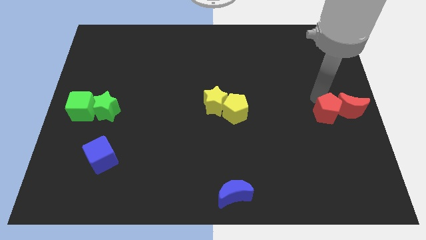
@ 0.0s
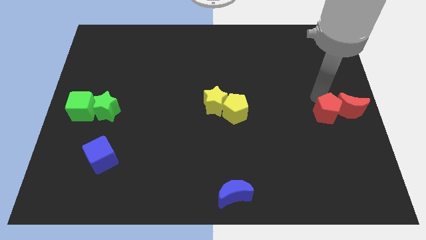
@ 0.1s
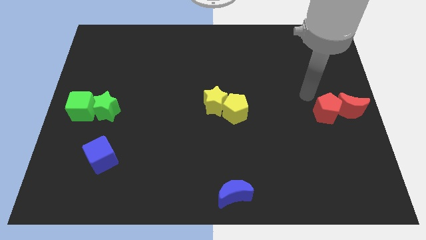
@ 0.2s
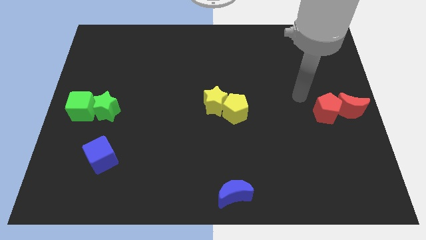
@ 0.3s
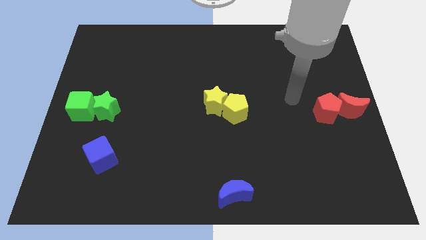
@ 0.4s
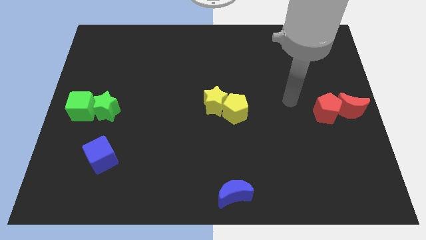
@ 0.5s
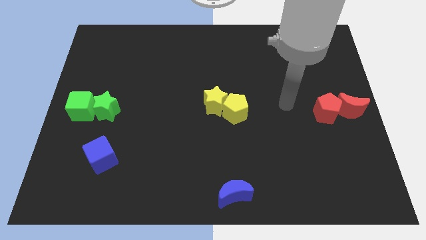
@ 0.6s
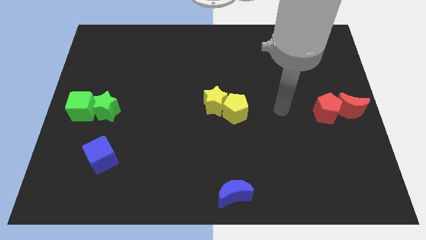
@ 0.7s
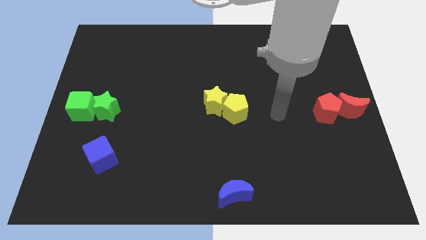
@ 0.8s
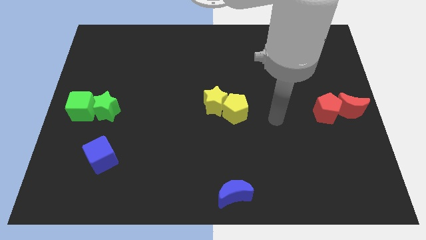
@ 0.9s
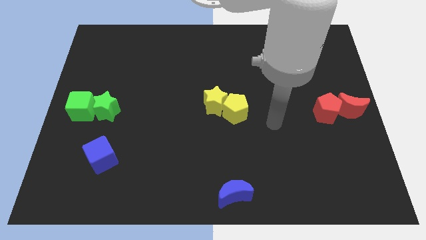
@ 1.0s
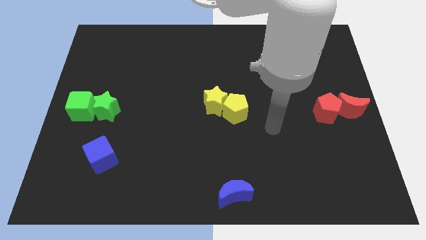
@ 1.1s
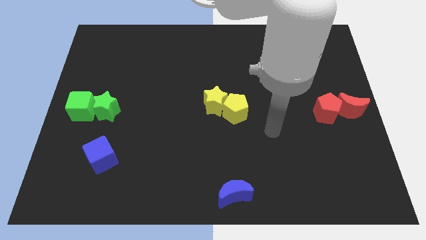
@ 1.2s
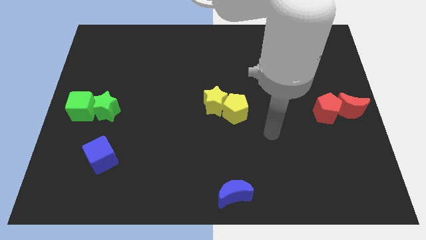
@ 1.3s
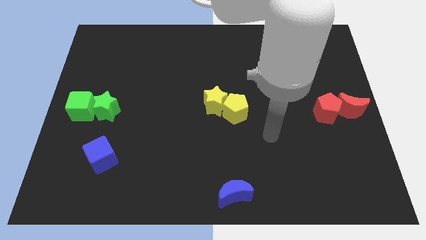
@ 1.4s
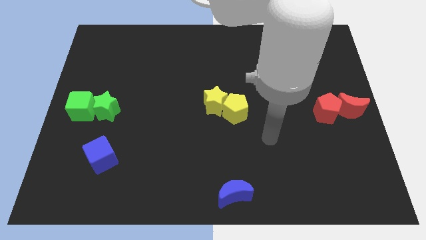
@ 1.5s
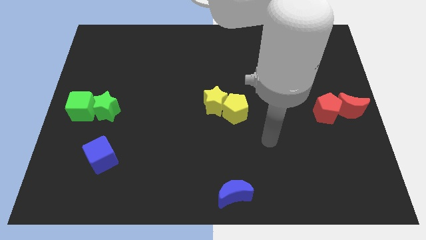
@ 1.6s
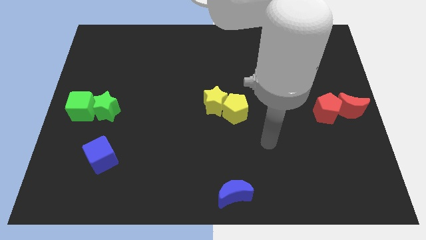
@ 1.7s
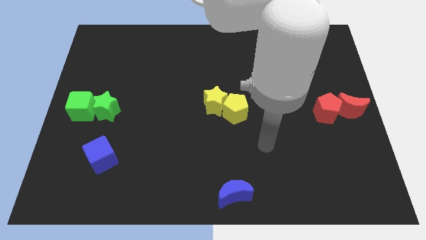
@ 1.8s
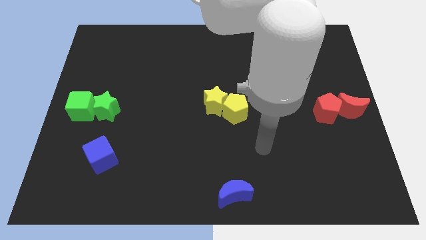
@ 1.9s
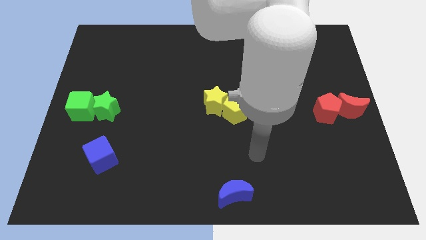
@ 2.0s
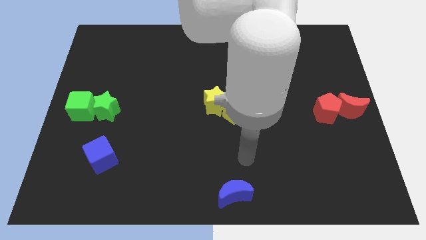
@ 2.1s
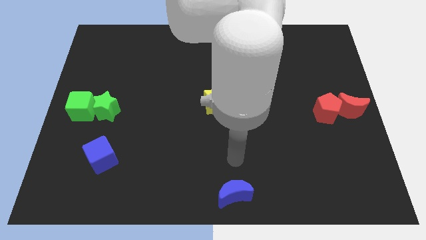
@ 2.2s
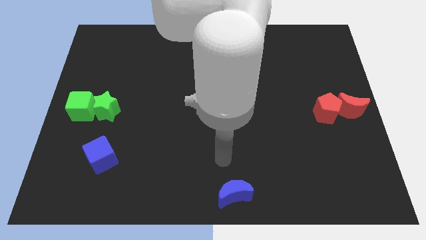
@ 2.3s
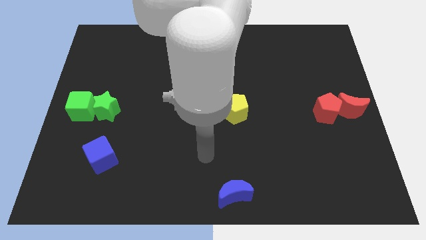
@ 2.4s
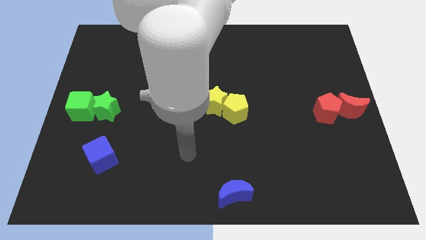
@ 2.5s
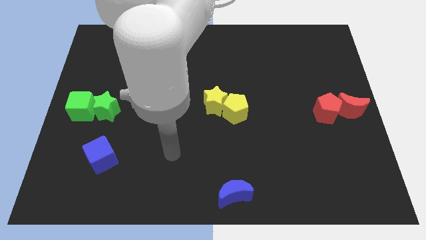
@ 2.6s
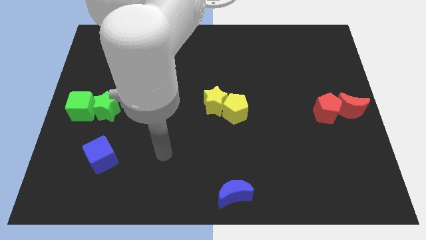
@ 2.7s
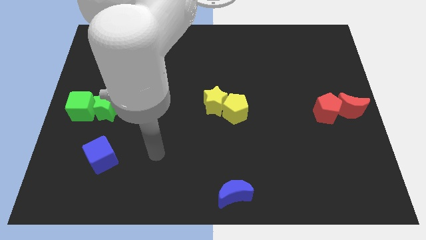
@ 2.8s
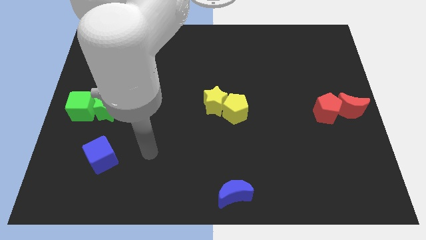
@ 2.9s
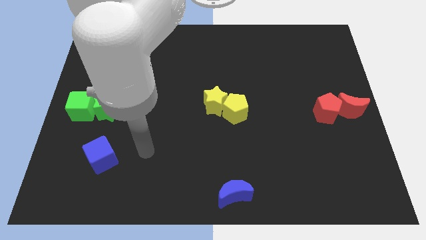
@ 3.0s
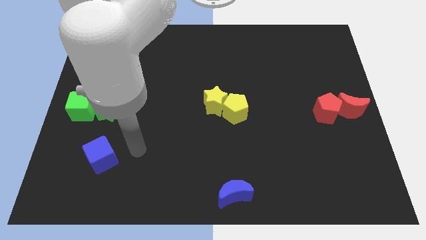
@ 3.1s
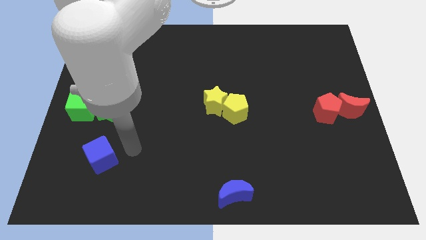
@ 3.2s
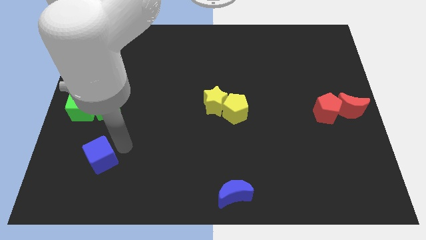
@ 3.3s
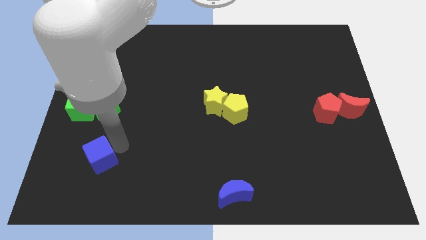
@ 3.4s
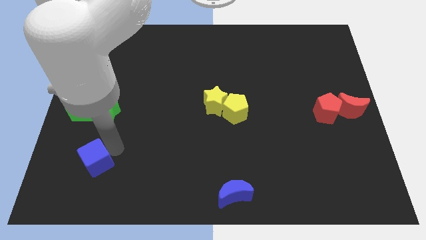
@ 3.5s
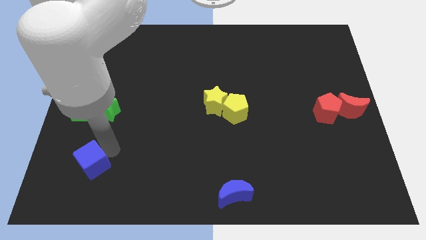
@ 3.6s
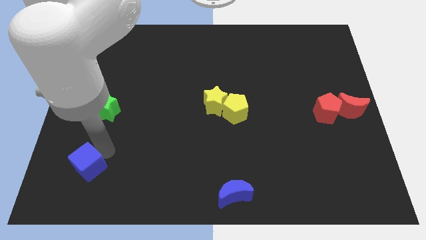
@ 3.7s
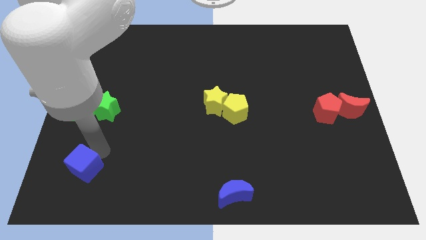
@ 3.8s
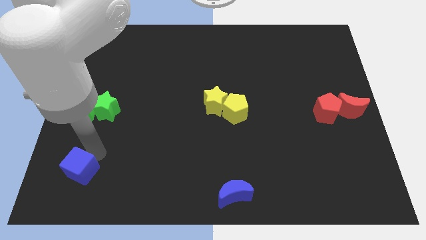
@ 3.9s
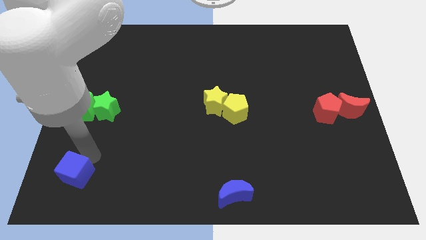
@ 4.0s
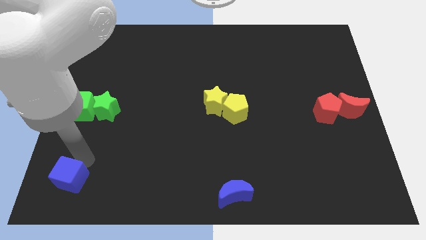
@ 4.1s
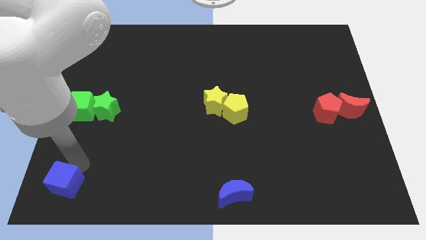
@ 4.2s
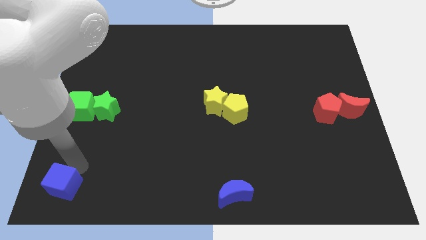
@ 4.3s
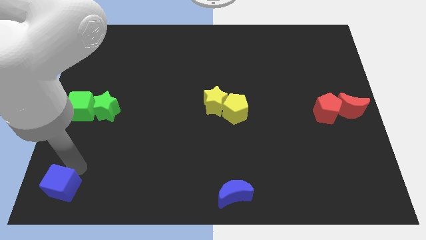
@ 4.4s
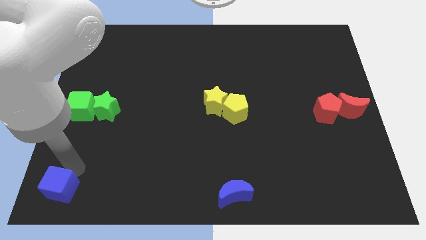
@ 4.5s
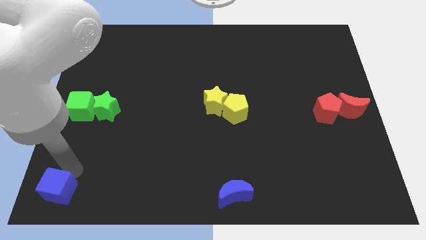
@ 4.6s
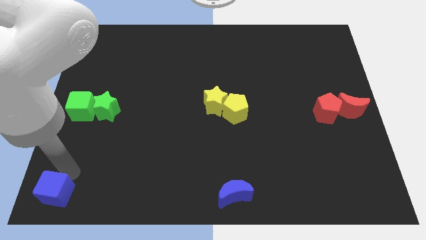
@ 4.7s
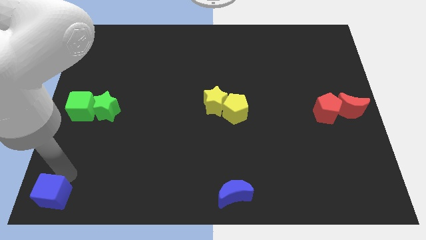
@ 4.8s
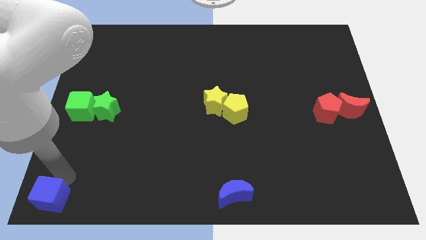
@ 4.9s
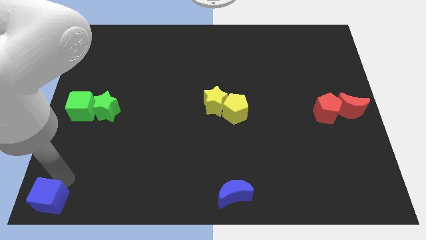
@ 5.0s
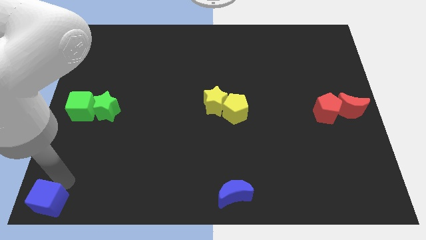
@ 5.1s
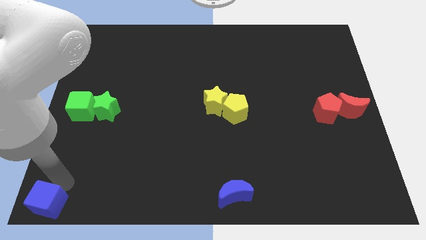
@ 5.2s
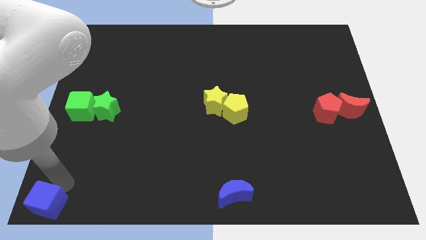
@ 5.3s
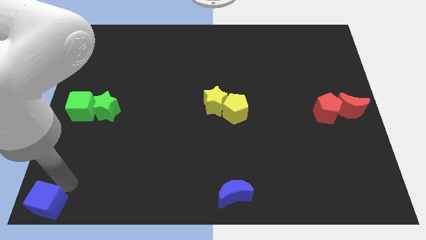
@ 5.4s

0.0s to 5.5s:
move the blue cube to the bottom left of the table

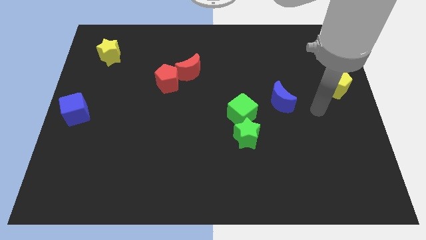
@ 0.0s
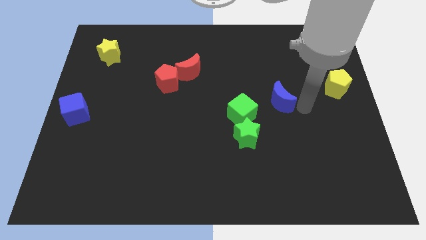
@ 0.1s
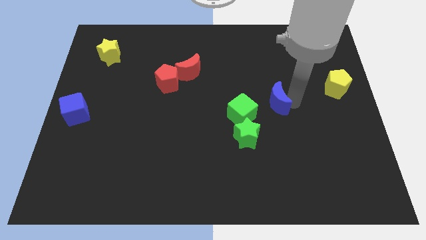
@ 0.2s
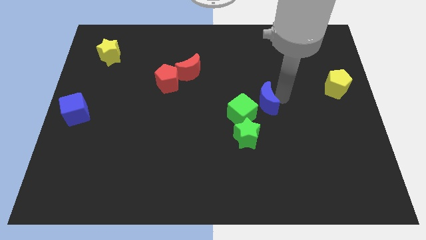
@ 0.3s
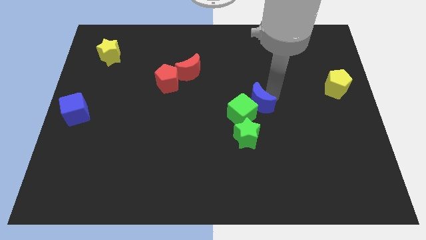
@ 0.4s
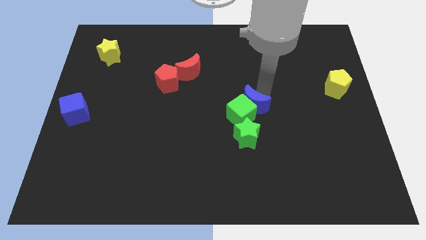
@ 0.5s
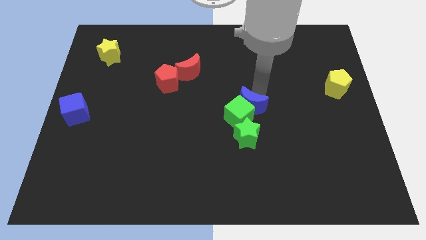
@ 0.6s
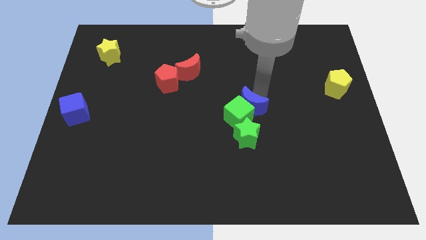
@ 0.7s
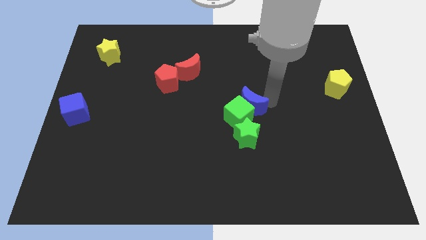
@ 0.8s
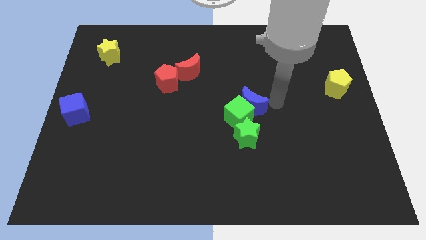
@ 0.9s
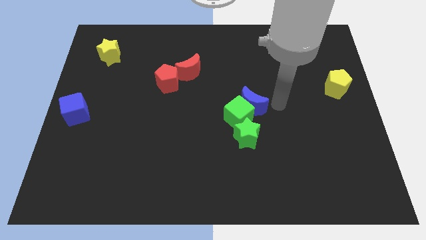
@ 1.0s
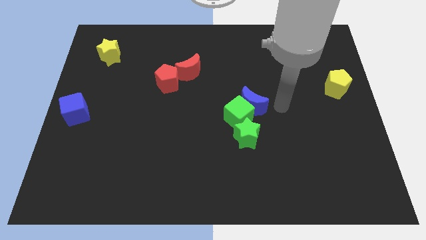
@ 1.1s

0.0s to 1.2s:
place blue moon into the green cube

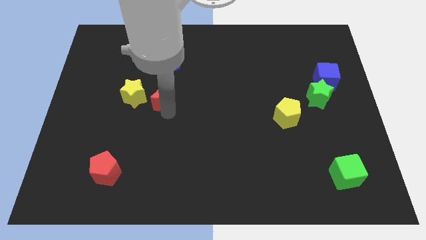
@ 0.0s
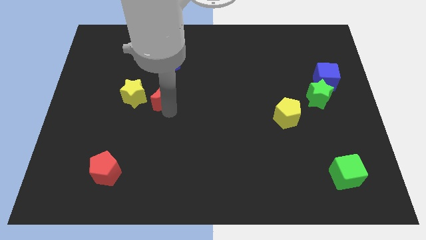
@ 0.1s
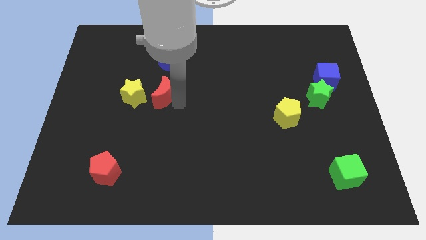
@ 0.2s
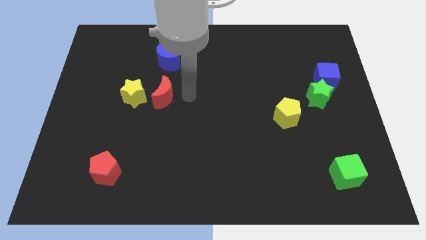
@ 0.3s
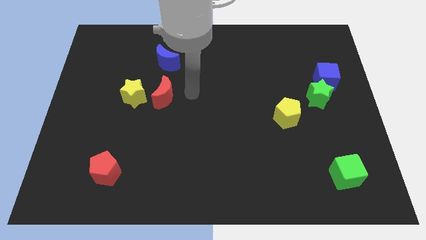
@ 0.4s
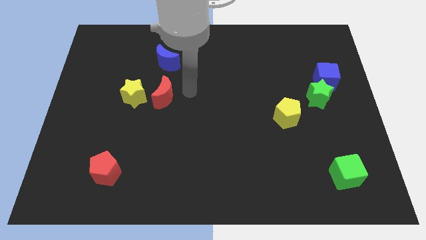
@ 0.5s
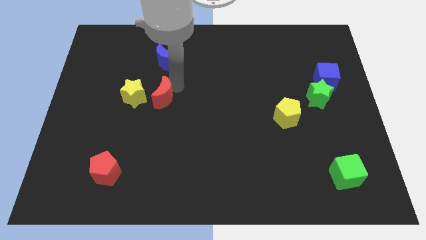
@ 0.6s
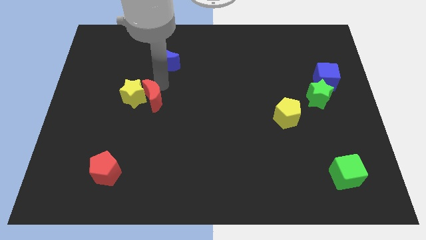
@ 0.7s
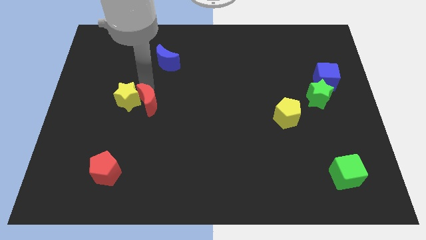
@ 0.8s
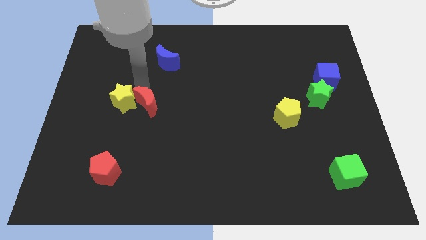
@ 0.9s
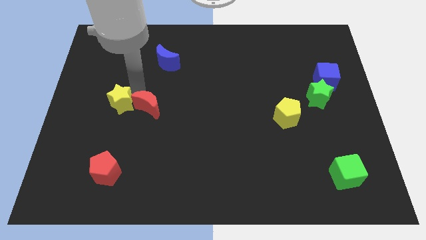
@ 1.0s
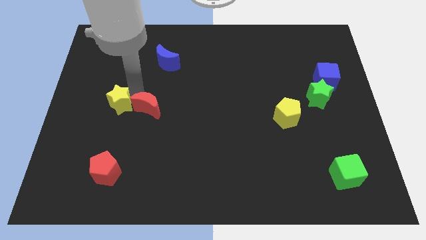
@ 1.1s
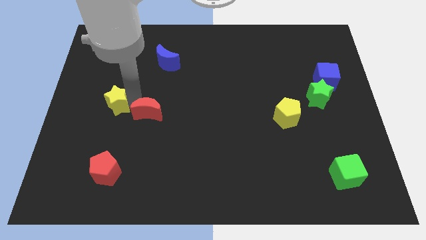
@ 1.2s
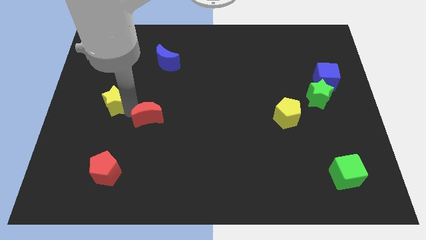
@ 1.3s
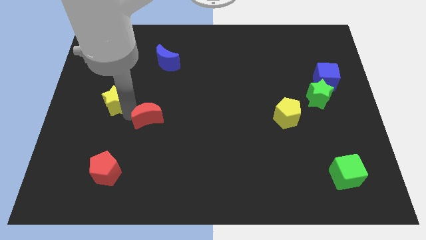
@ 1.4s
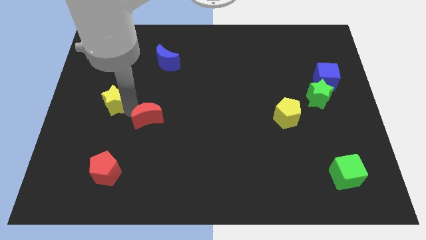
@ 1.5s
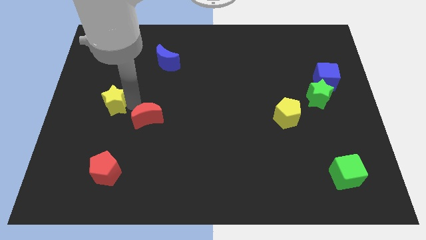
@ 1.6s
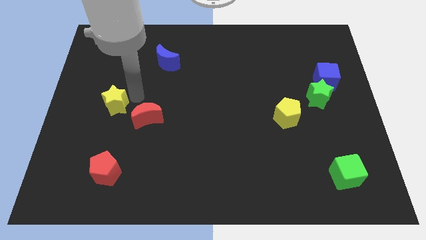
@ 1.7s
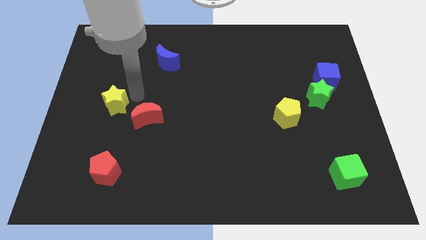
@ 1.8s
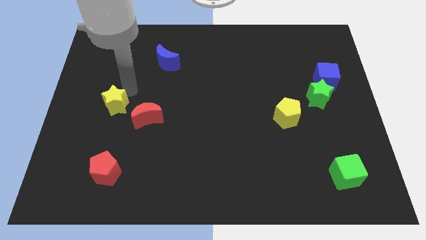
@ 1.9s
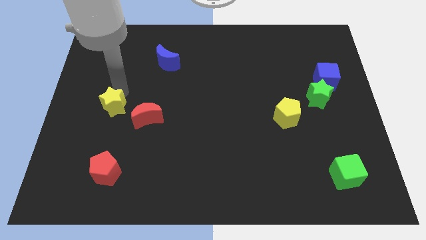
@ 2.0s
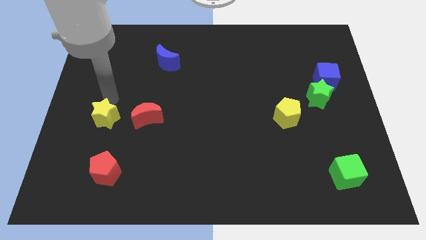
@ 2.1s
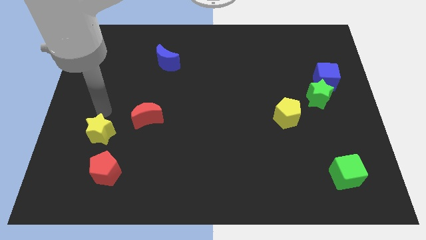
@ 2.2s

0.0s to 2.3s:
place yellow star above red pentagon
